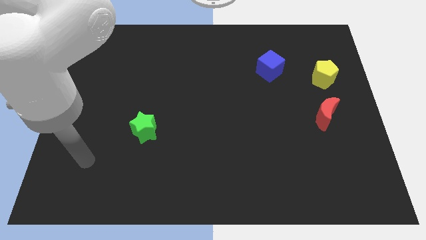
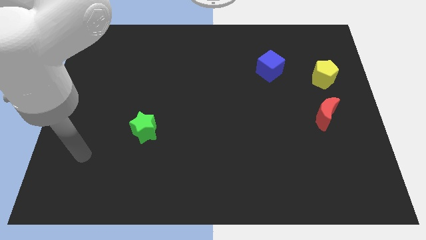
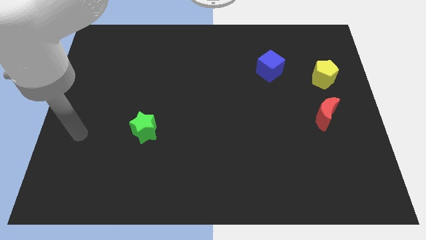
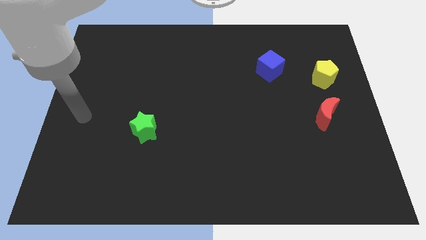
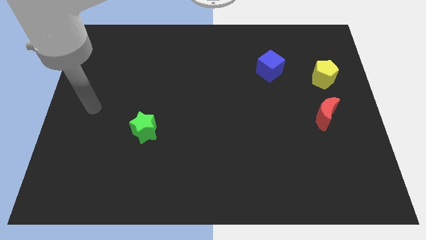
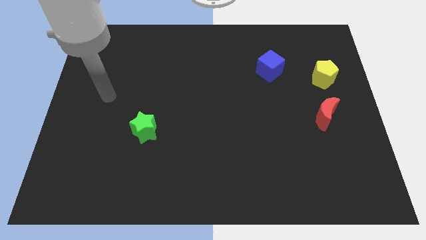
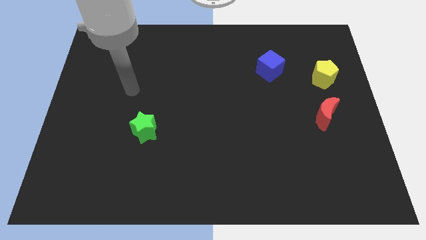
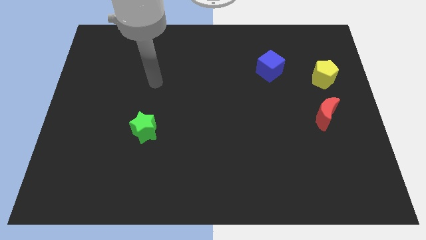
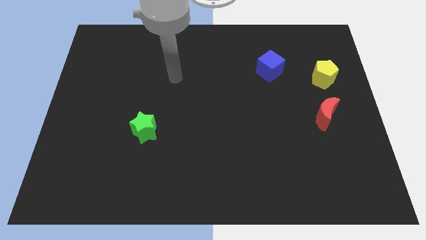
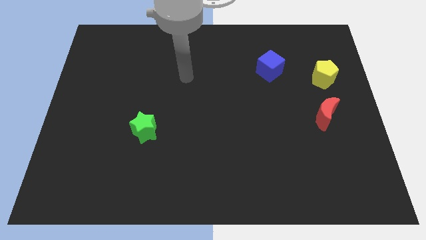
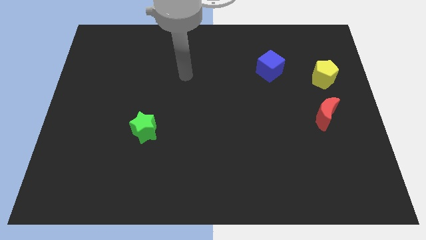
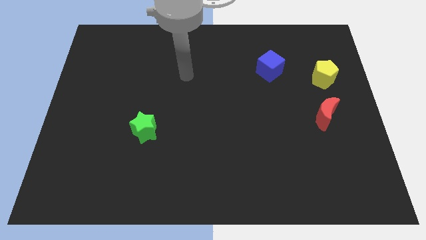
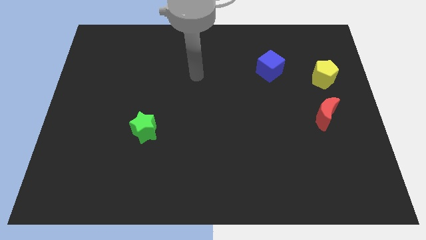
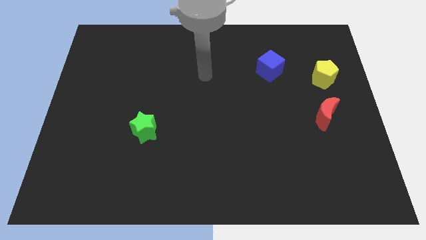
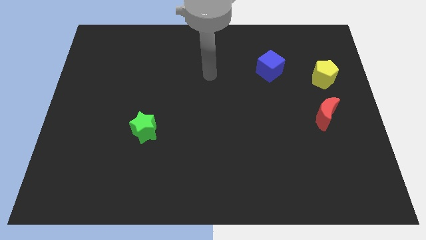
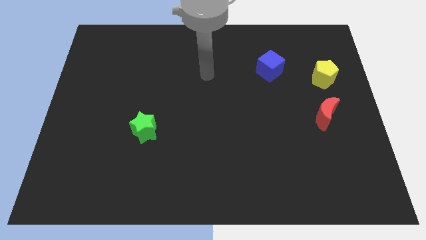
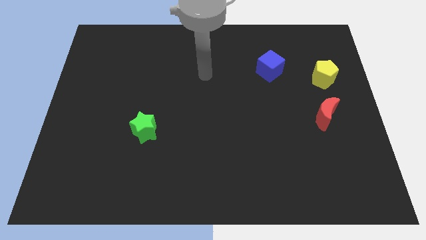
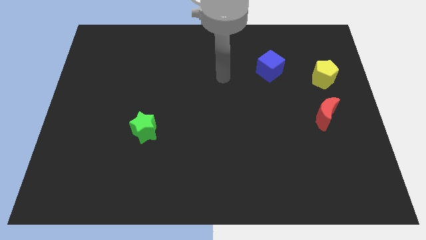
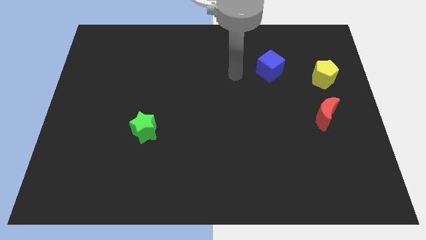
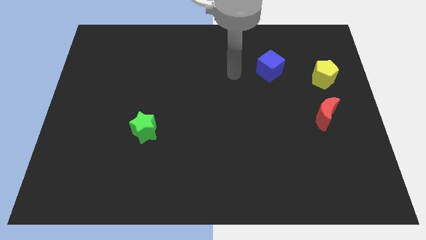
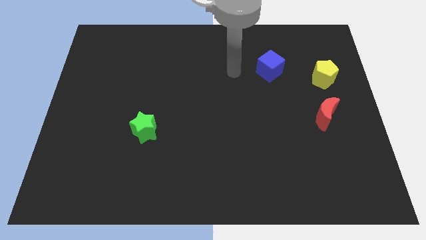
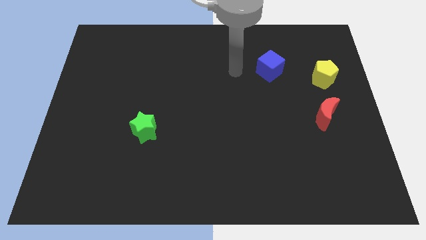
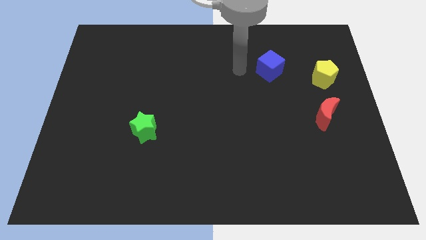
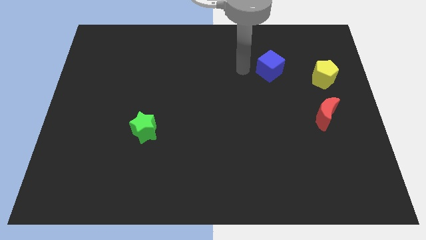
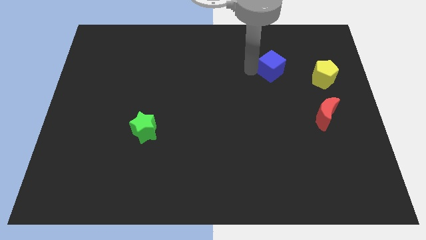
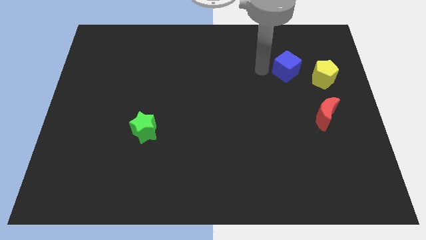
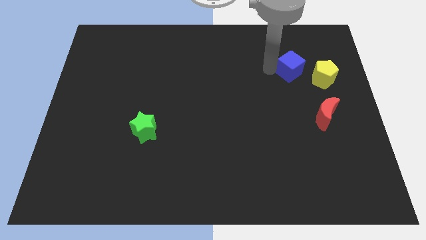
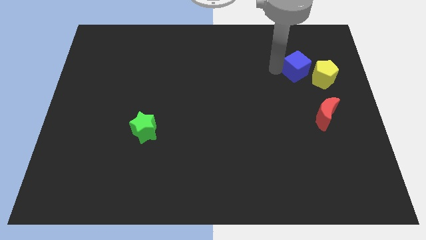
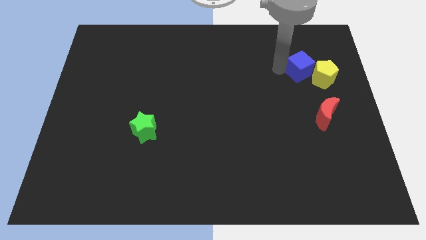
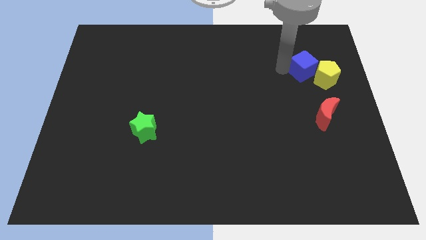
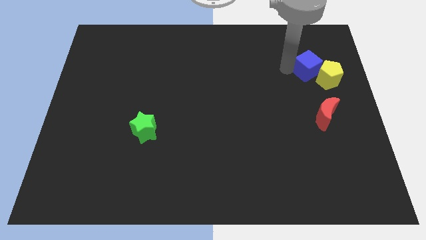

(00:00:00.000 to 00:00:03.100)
put the blue block to the yellow pentagon

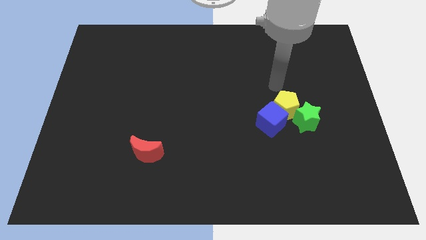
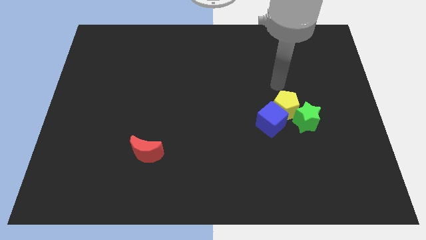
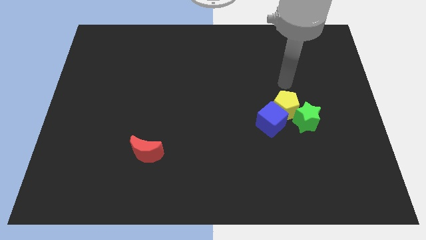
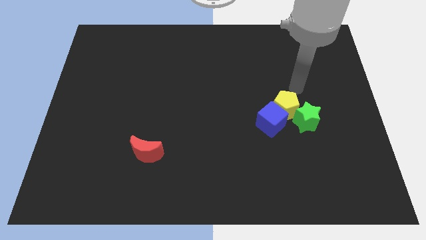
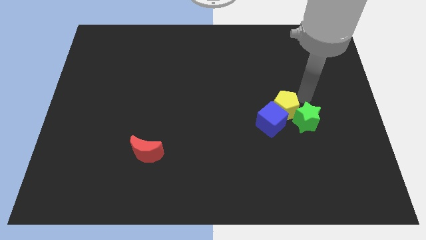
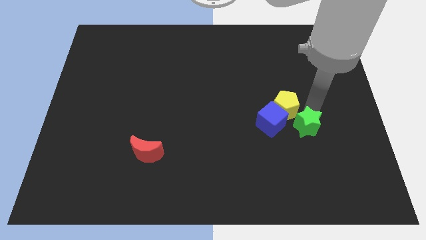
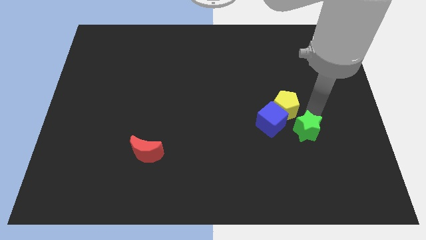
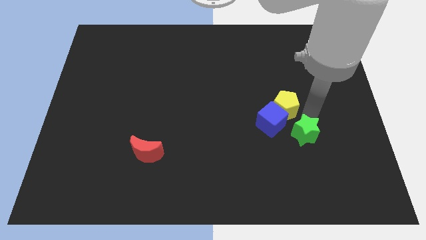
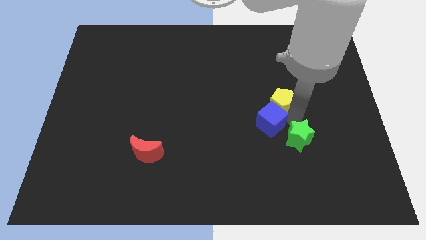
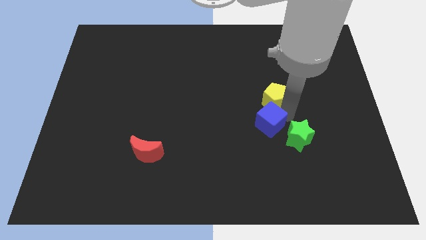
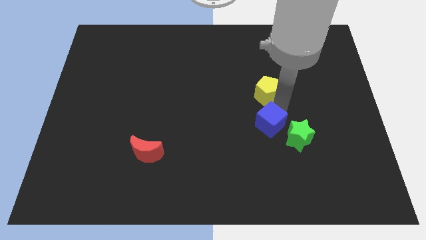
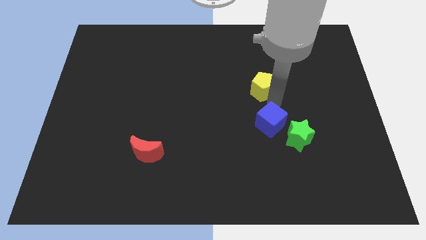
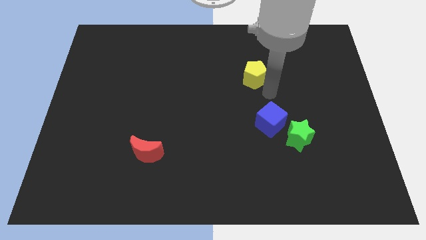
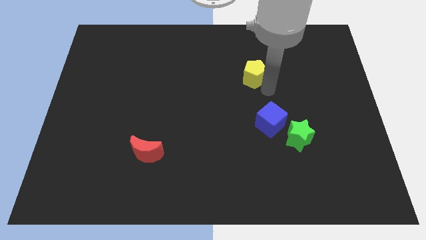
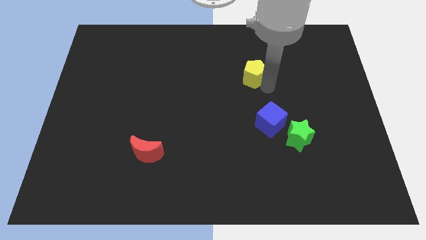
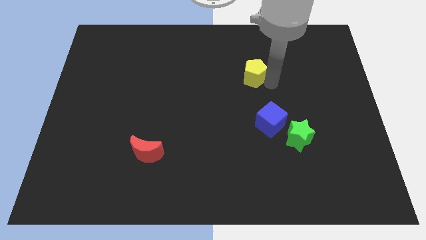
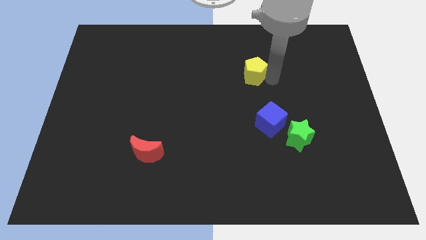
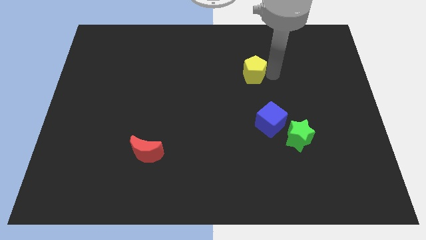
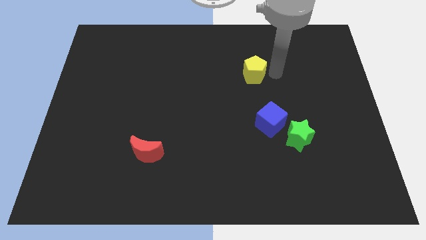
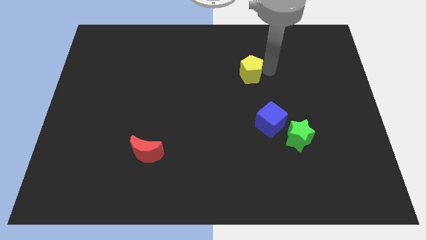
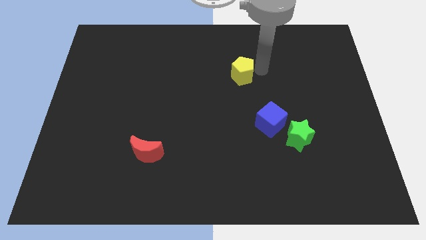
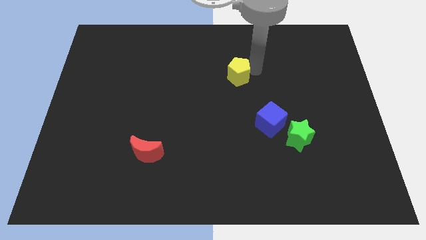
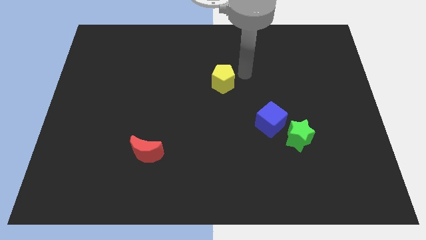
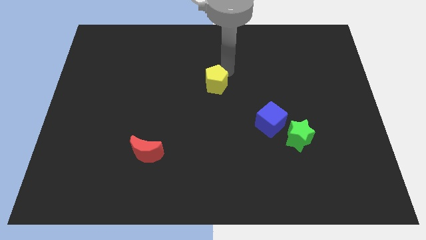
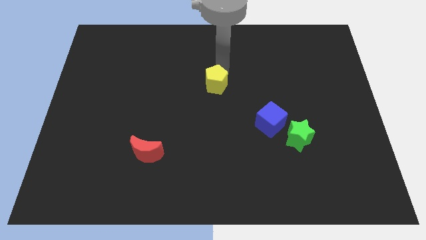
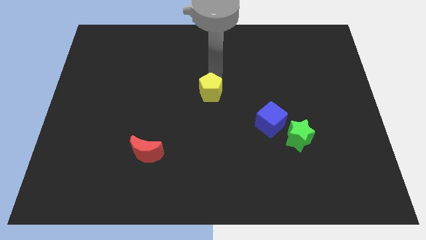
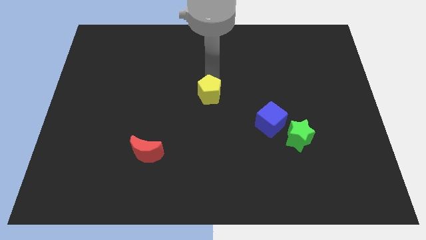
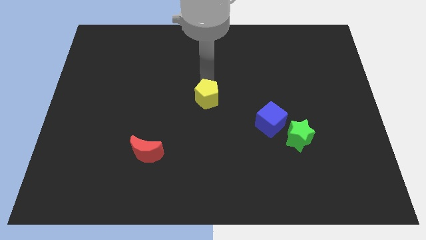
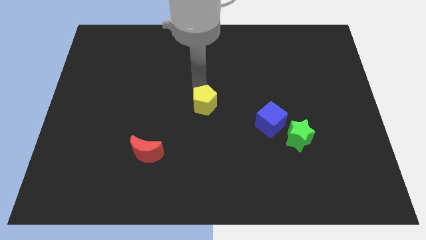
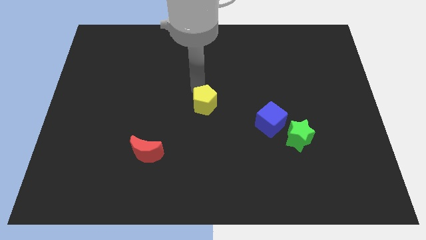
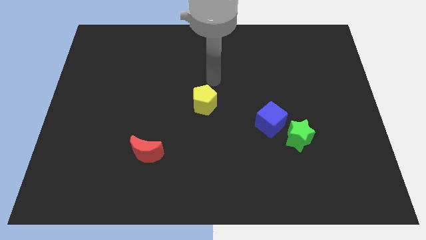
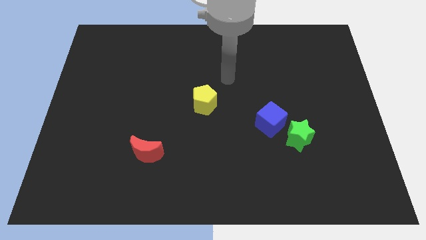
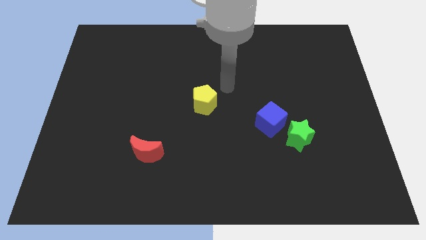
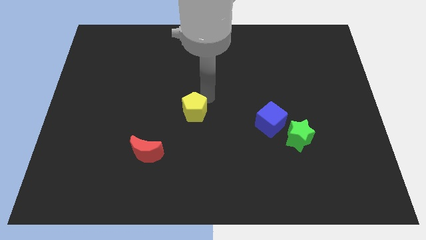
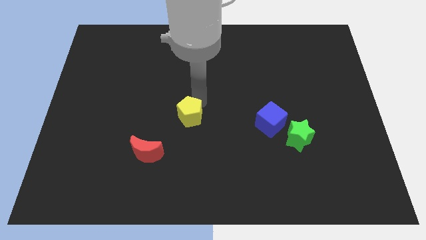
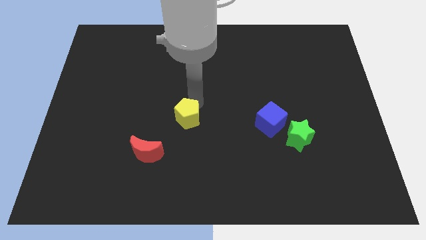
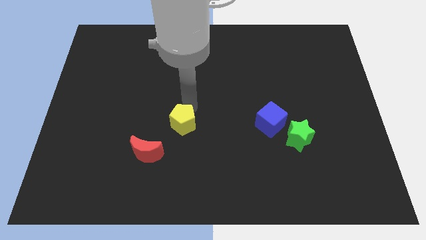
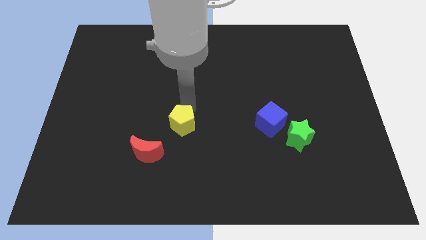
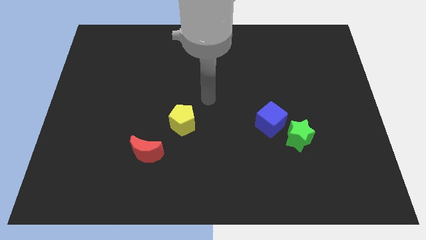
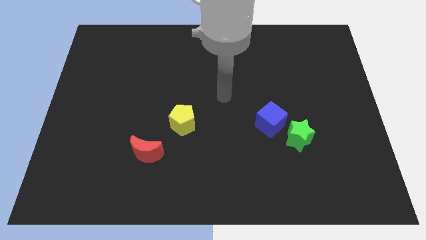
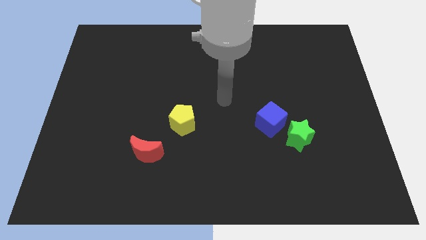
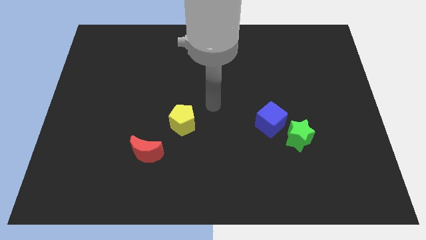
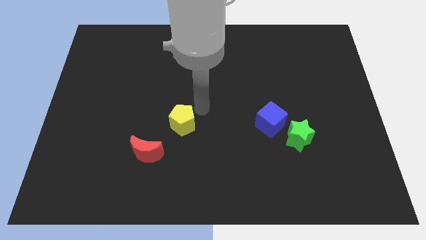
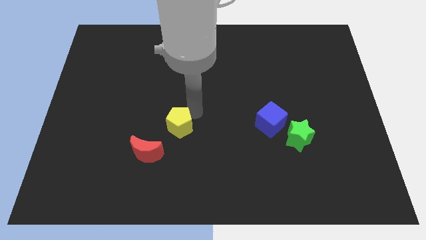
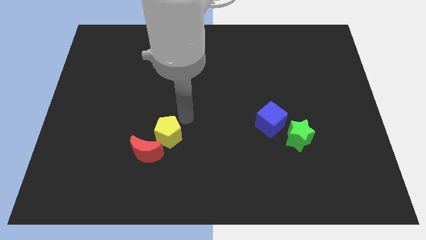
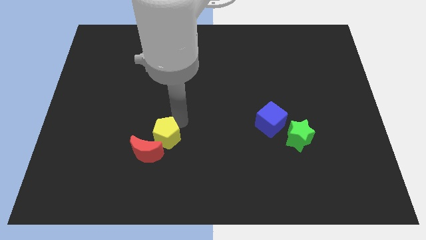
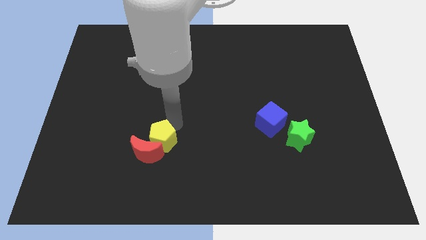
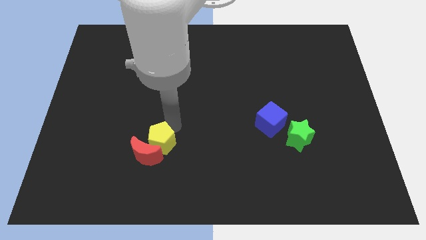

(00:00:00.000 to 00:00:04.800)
push the yellow block towards the red block

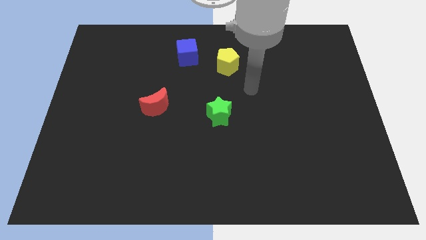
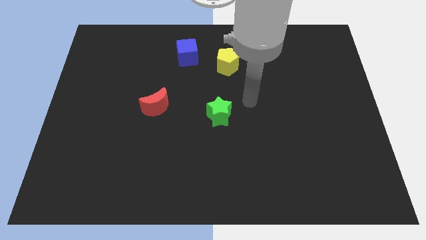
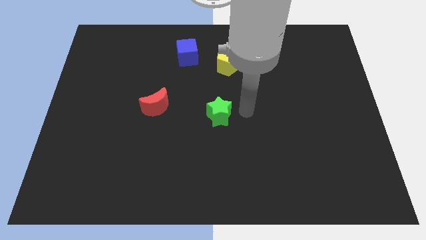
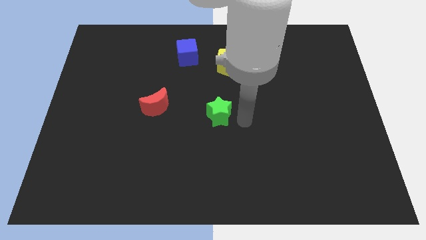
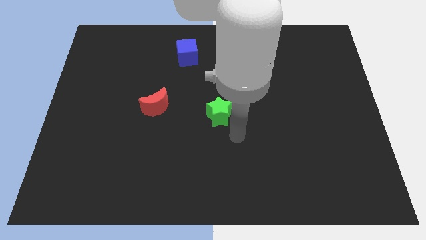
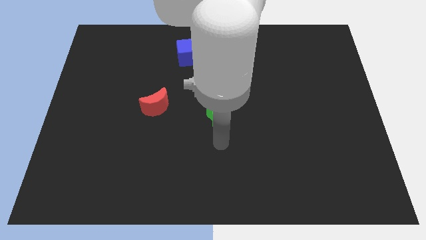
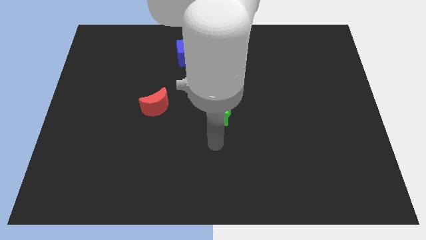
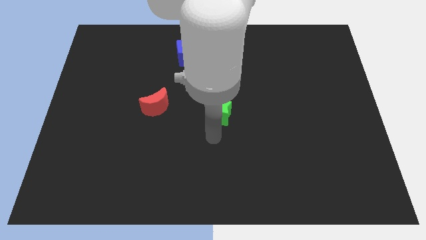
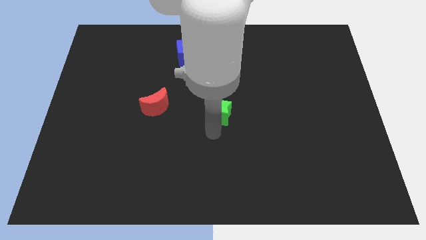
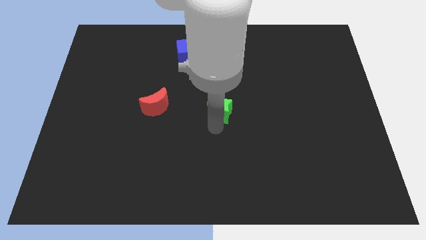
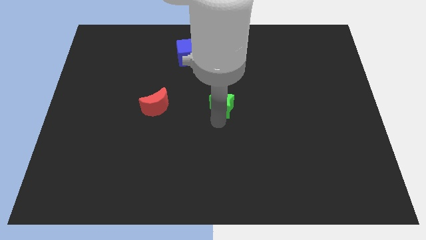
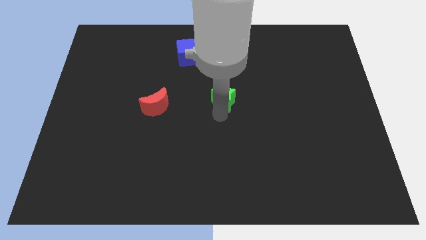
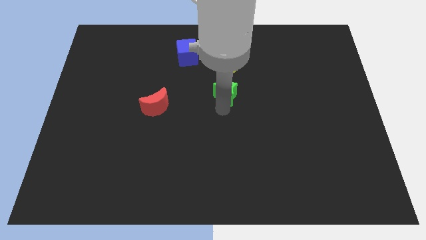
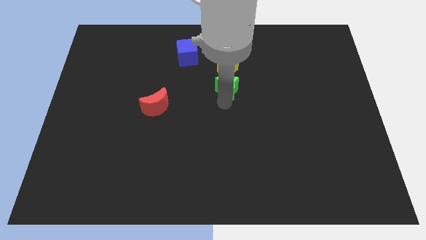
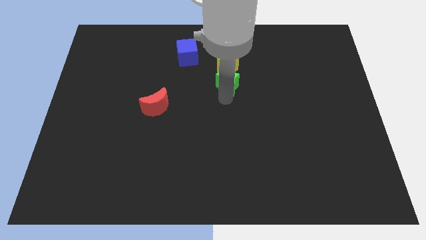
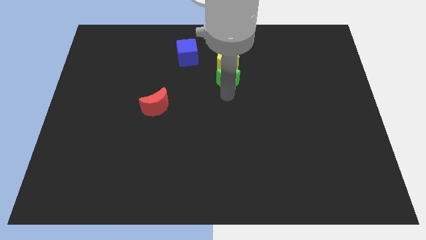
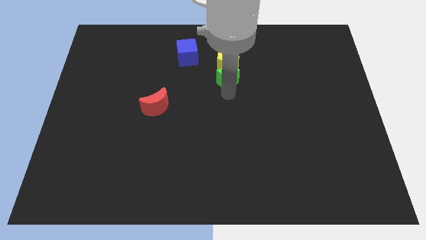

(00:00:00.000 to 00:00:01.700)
slide the star close to the yellow pentagon
